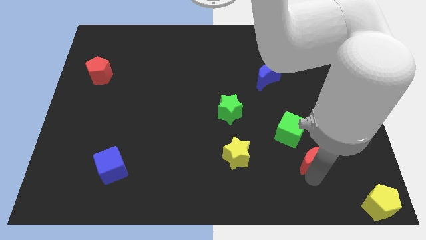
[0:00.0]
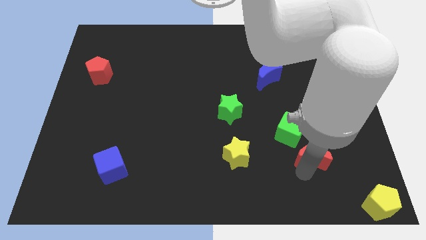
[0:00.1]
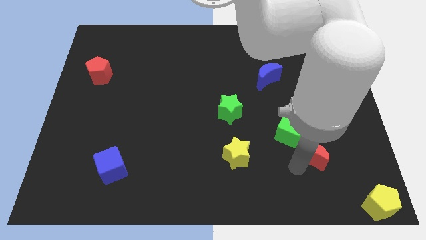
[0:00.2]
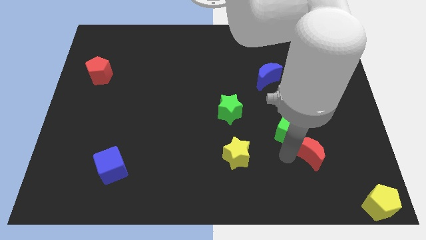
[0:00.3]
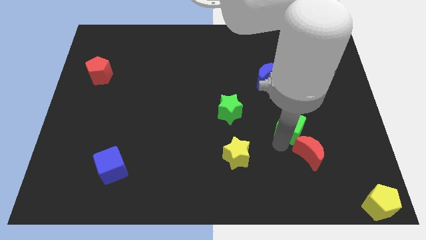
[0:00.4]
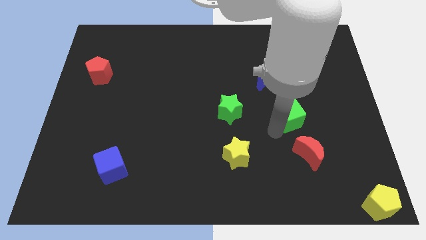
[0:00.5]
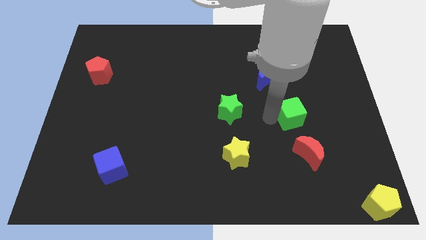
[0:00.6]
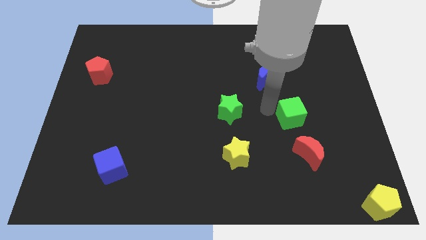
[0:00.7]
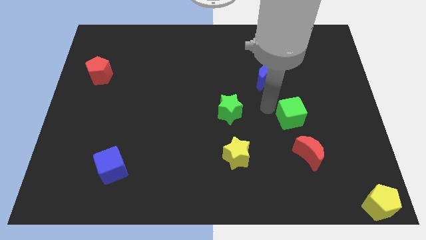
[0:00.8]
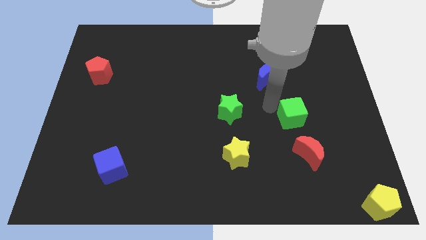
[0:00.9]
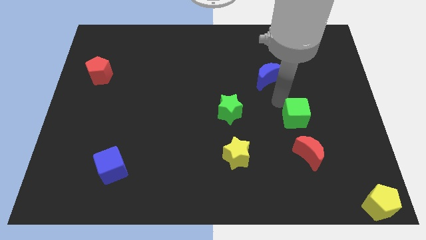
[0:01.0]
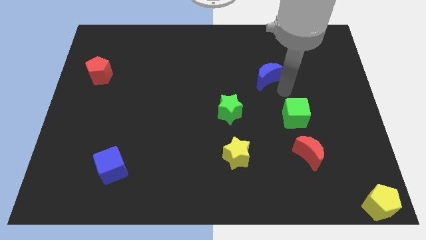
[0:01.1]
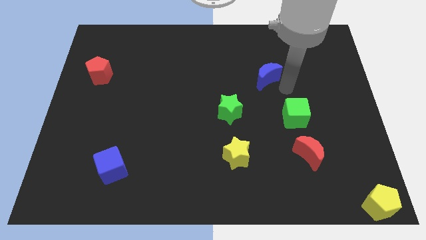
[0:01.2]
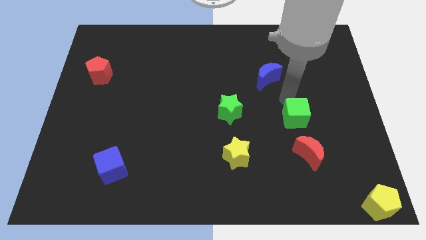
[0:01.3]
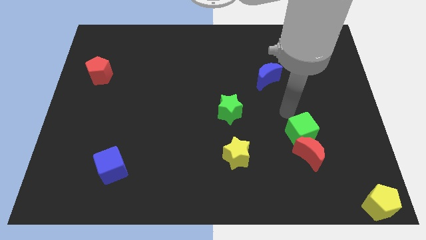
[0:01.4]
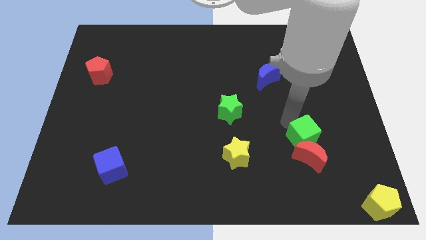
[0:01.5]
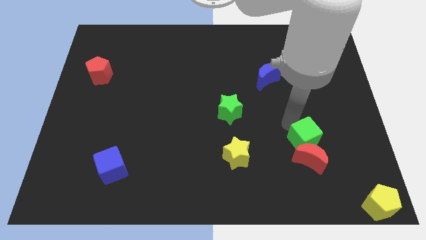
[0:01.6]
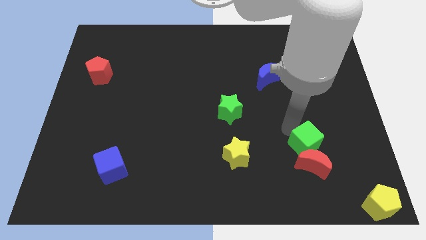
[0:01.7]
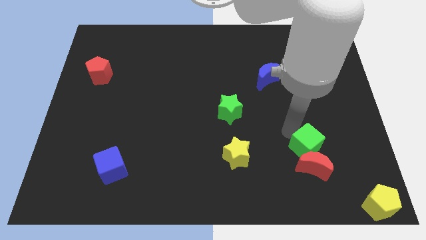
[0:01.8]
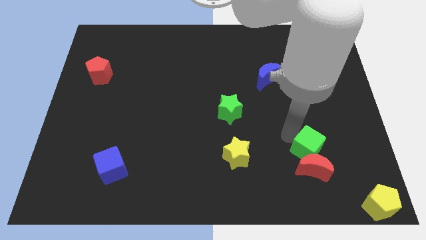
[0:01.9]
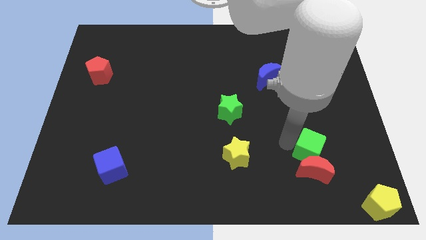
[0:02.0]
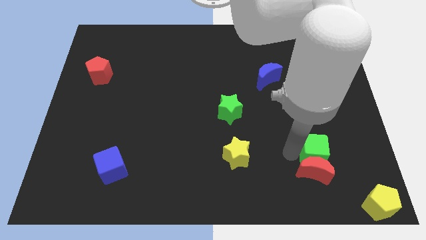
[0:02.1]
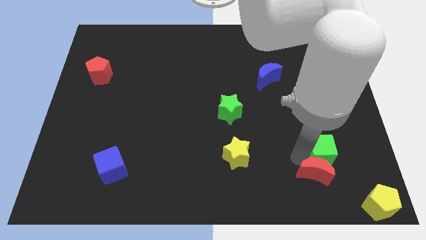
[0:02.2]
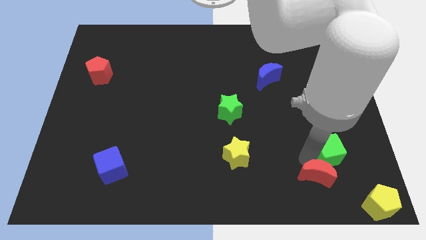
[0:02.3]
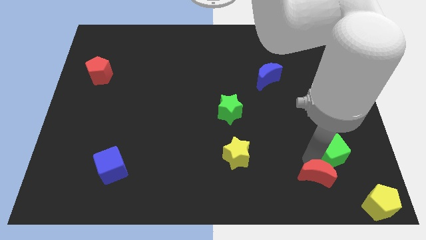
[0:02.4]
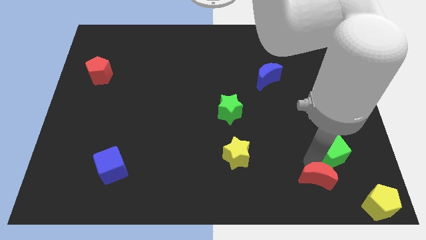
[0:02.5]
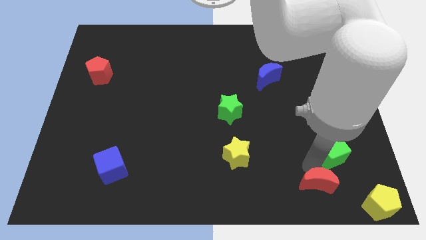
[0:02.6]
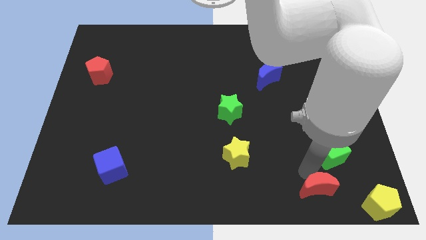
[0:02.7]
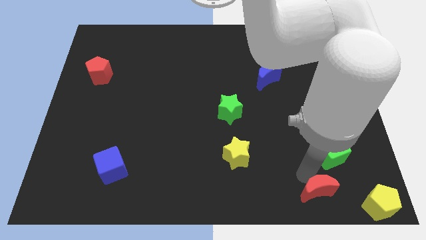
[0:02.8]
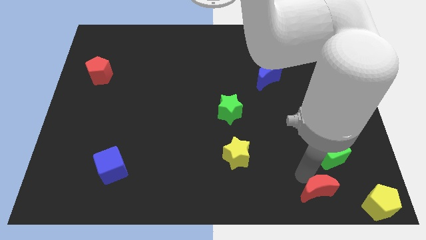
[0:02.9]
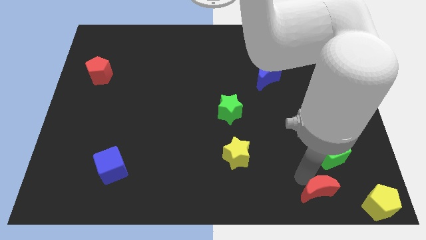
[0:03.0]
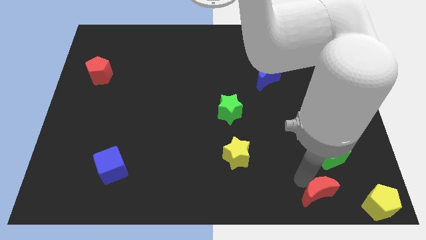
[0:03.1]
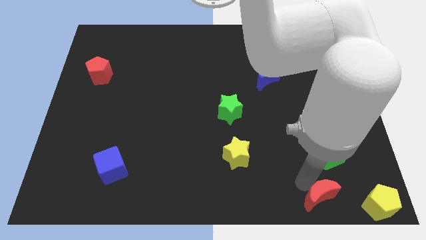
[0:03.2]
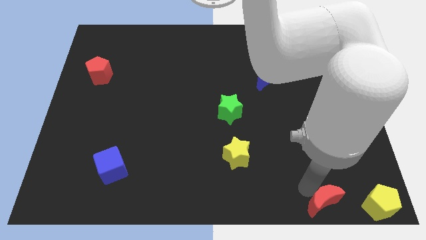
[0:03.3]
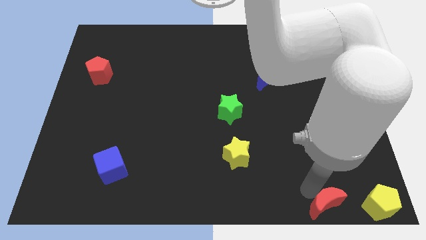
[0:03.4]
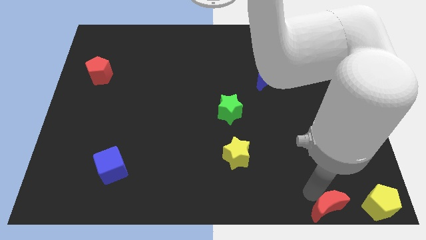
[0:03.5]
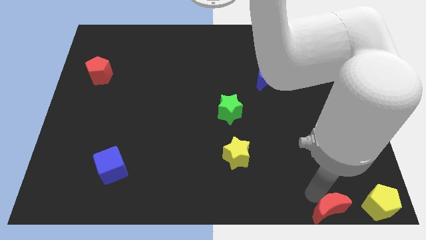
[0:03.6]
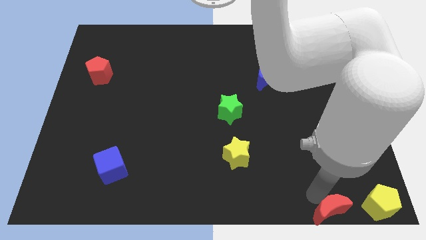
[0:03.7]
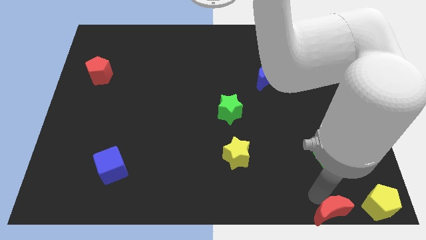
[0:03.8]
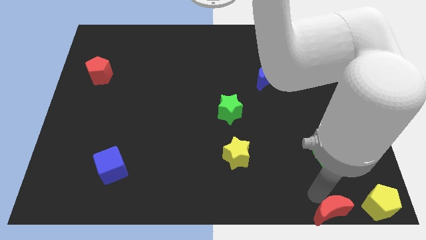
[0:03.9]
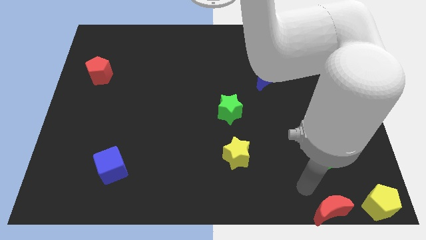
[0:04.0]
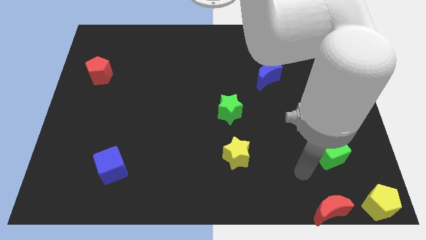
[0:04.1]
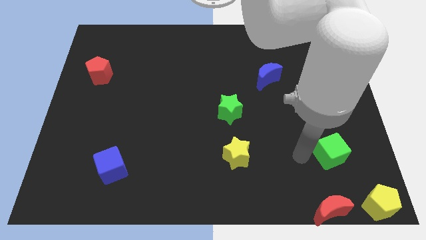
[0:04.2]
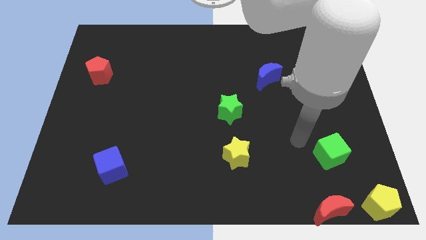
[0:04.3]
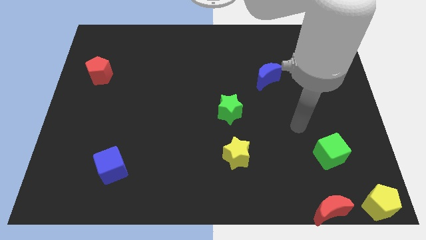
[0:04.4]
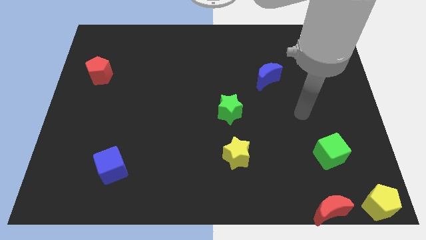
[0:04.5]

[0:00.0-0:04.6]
place the red crescent to the left of the yellow pentagon

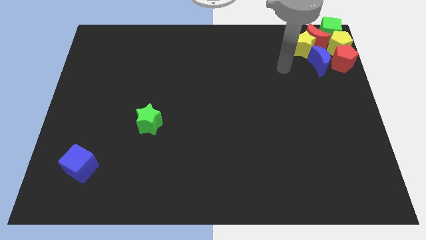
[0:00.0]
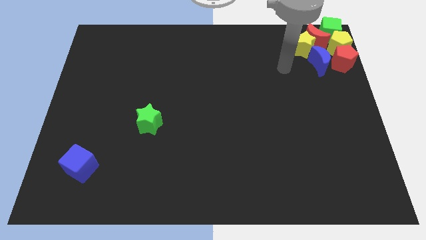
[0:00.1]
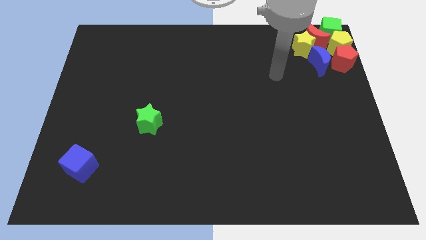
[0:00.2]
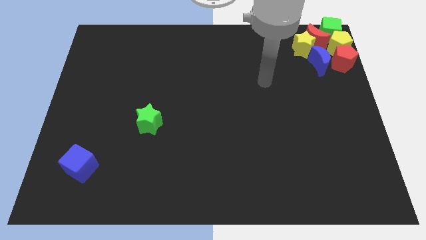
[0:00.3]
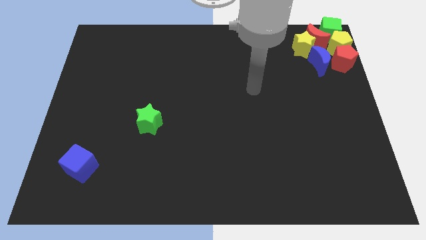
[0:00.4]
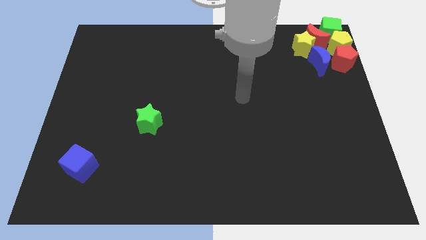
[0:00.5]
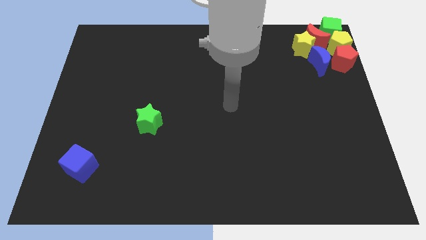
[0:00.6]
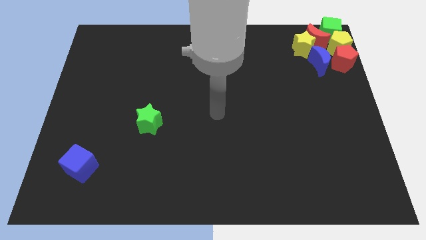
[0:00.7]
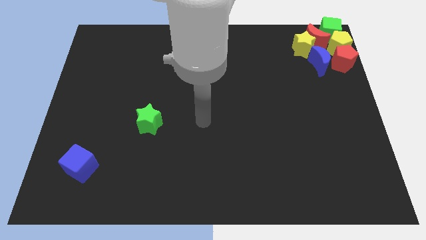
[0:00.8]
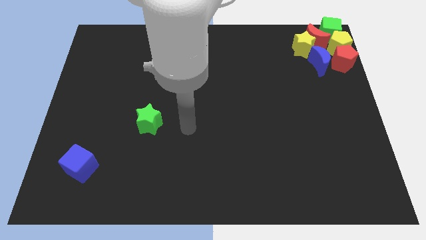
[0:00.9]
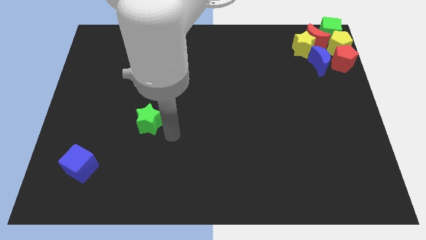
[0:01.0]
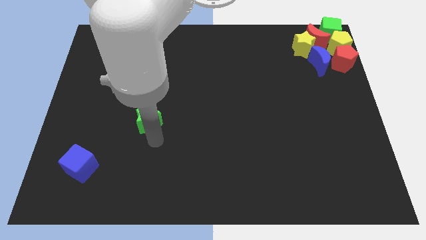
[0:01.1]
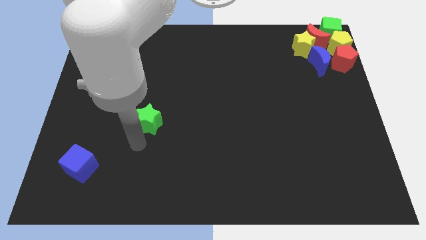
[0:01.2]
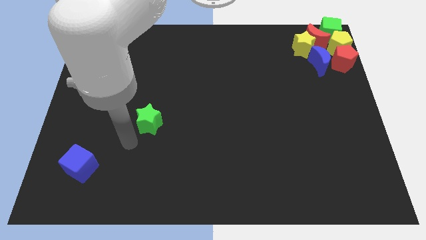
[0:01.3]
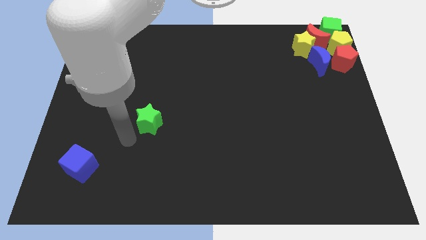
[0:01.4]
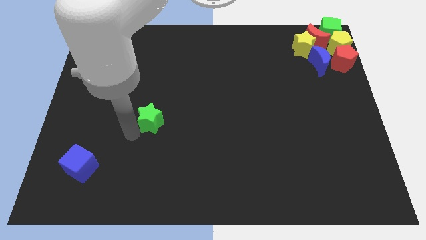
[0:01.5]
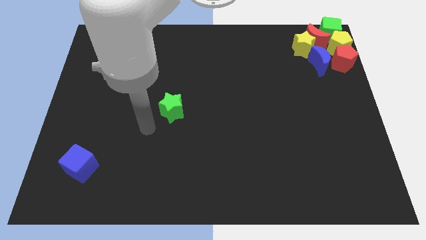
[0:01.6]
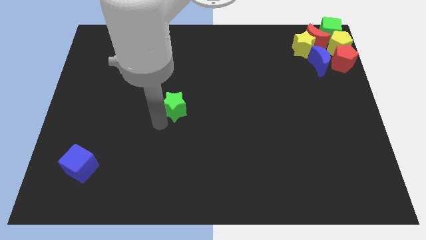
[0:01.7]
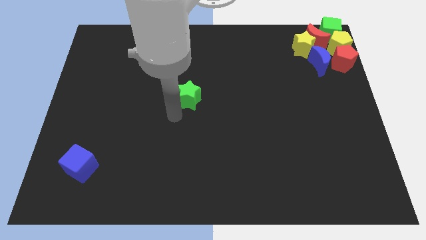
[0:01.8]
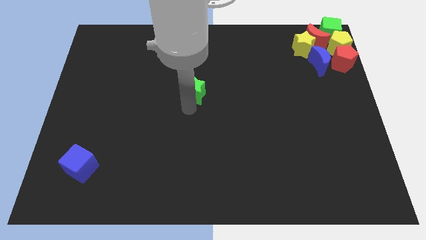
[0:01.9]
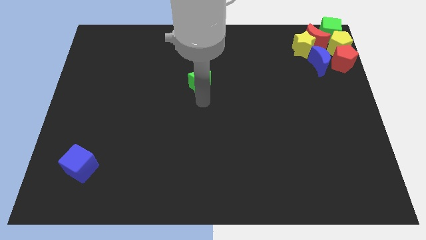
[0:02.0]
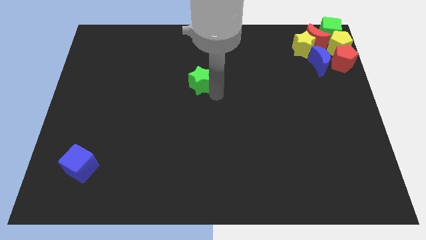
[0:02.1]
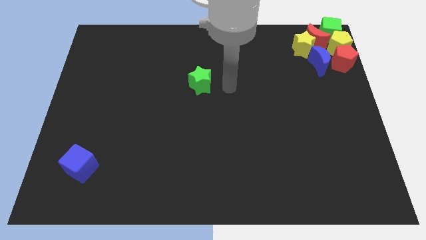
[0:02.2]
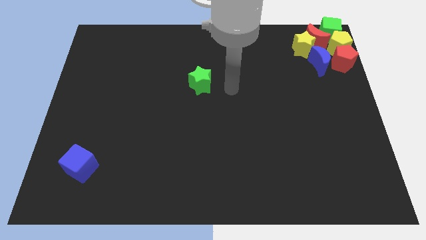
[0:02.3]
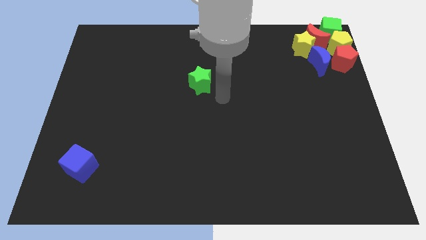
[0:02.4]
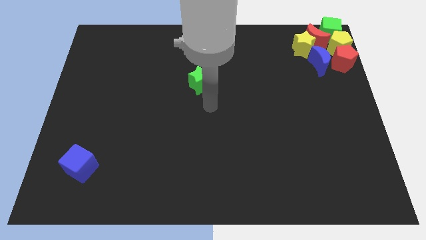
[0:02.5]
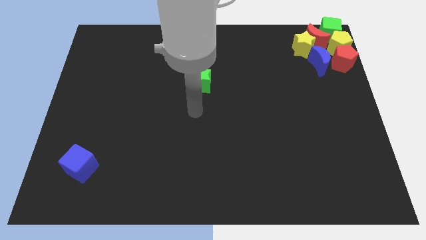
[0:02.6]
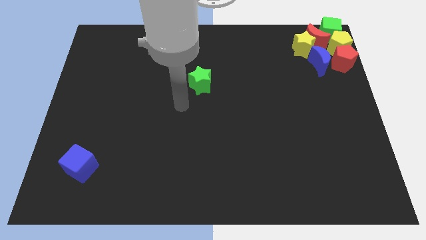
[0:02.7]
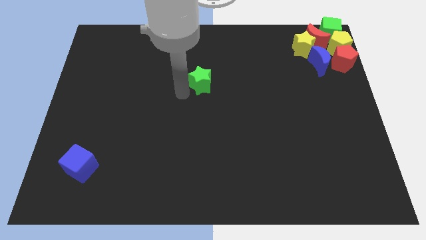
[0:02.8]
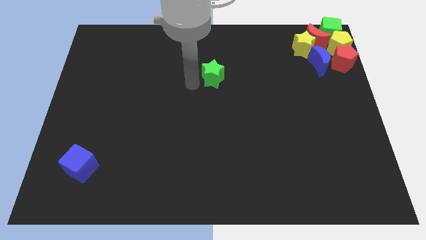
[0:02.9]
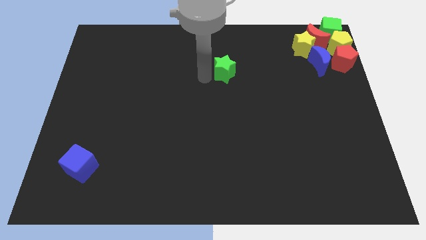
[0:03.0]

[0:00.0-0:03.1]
push the green star towards the group of blocks

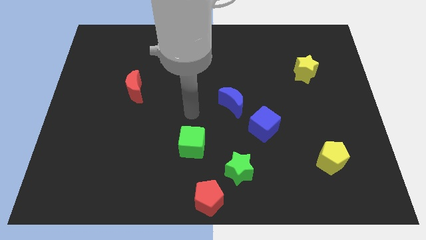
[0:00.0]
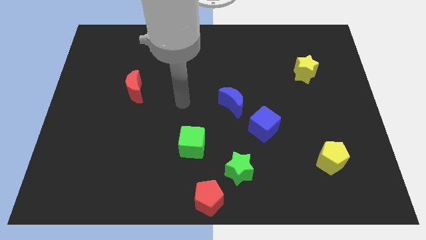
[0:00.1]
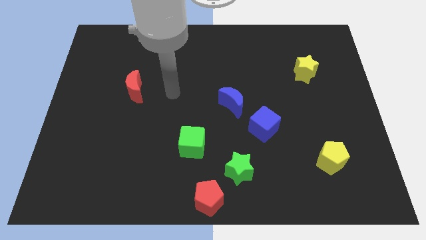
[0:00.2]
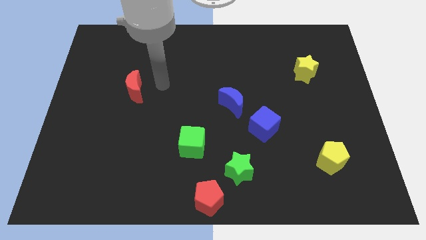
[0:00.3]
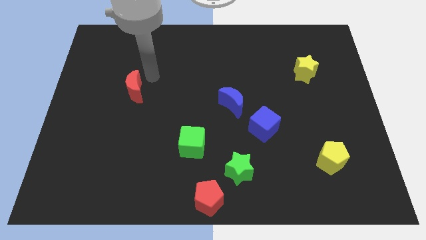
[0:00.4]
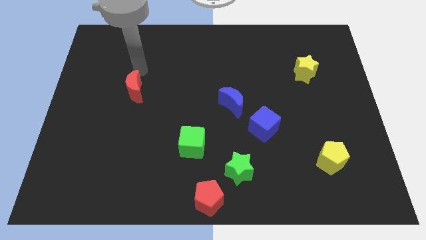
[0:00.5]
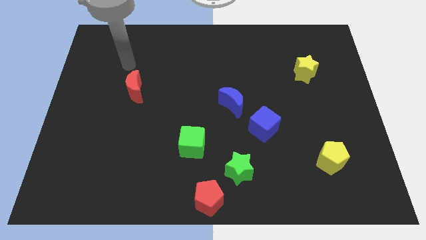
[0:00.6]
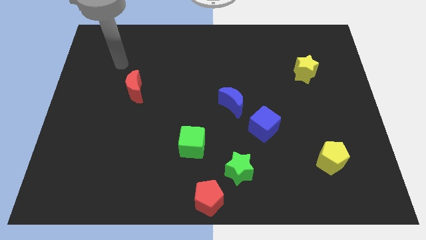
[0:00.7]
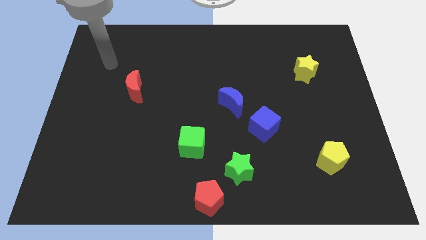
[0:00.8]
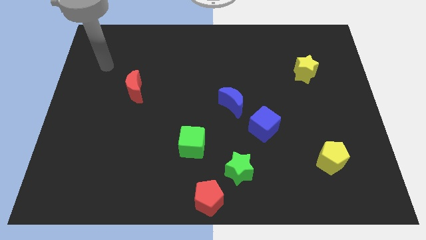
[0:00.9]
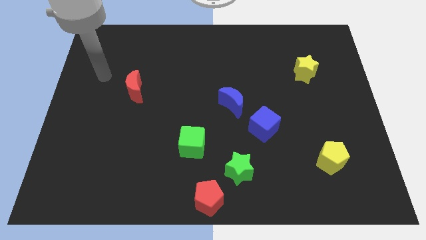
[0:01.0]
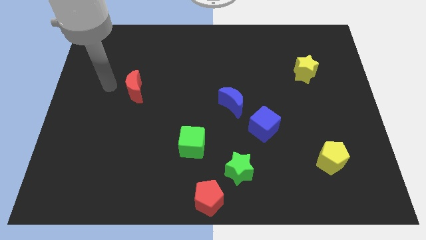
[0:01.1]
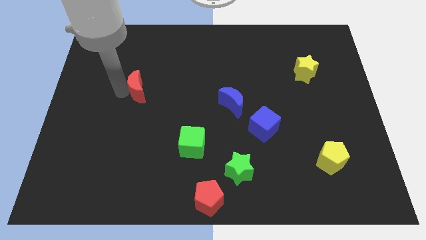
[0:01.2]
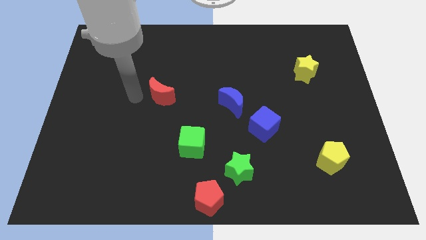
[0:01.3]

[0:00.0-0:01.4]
tap the red crescent
